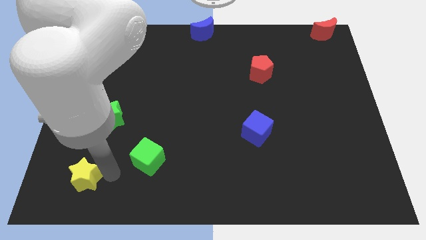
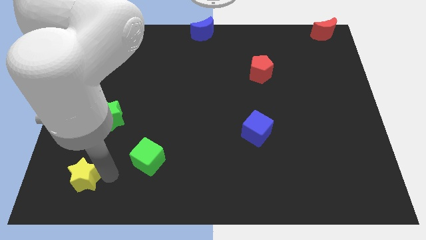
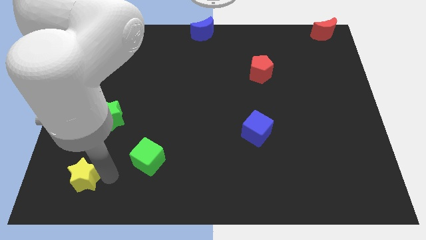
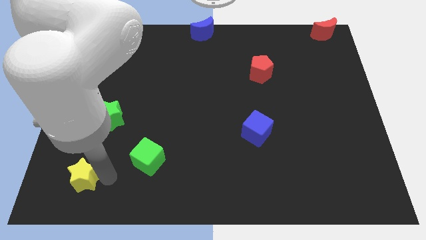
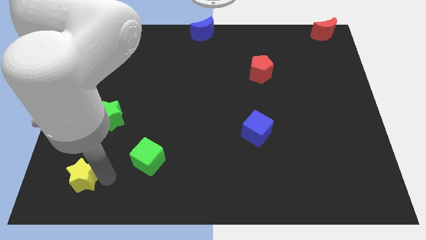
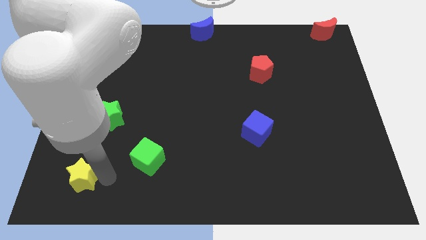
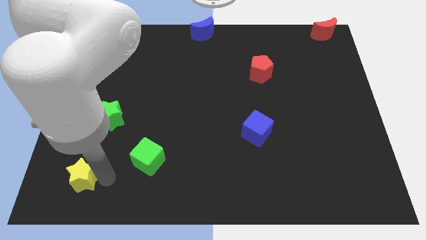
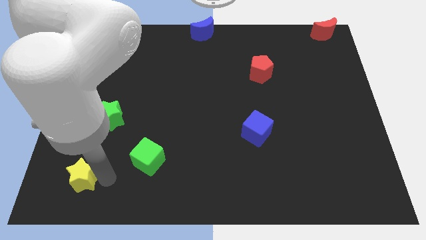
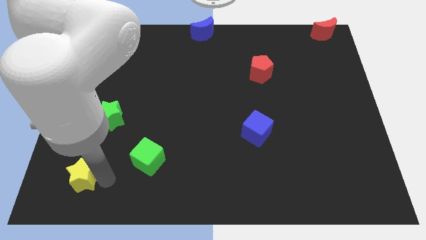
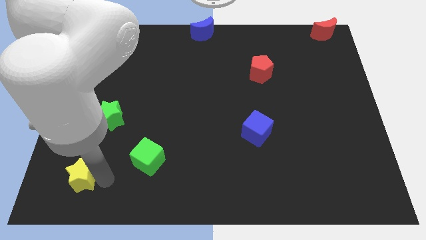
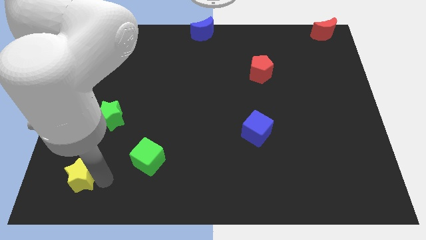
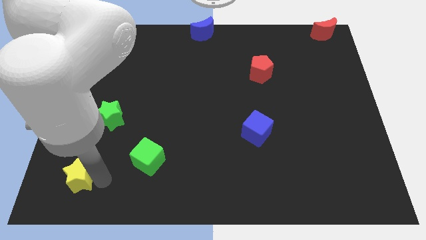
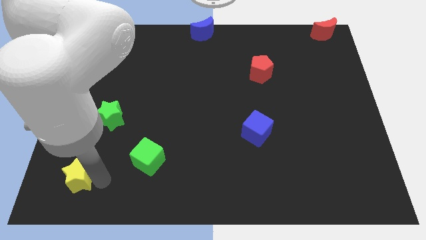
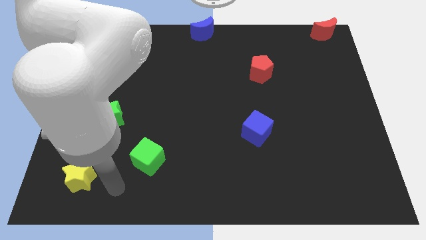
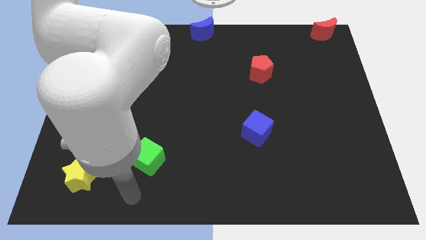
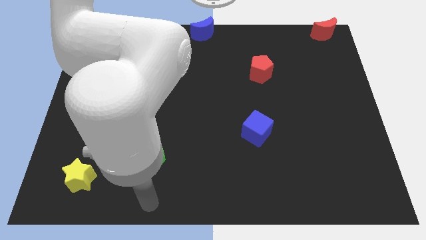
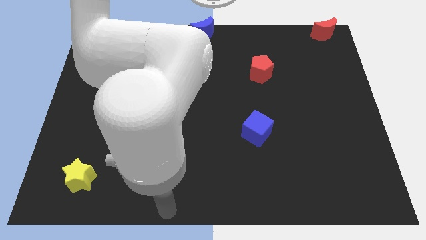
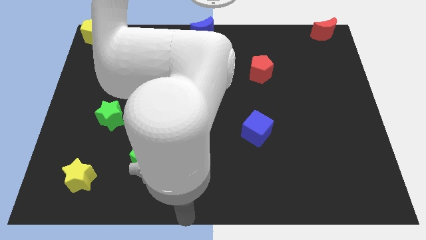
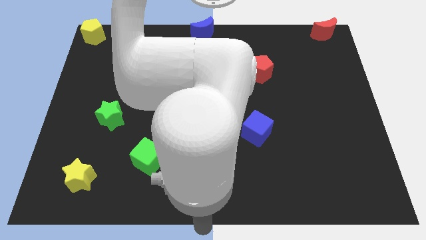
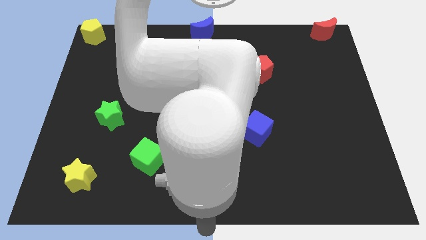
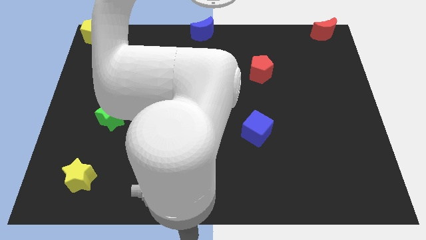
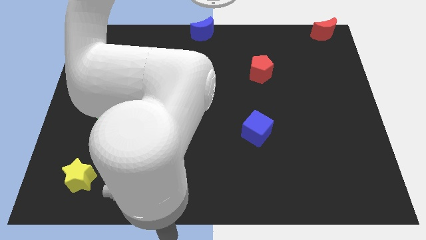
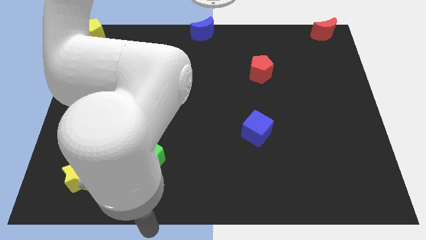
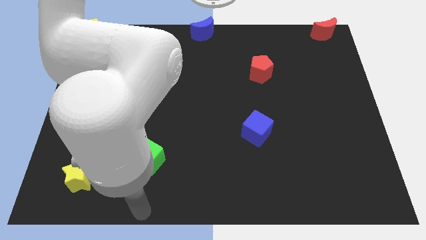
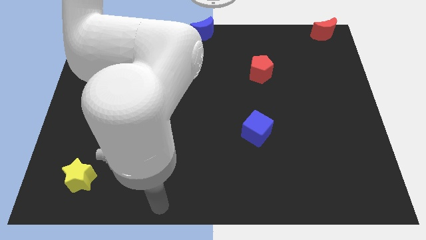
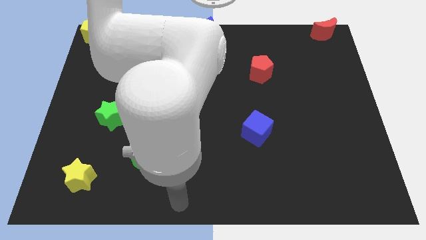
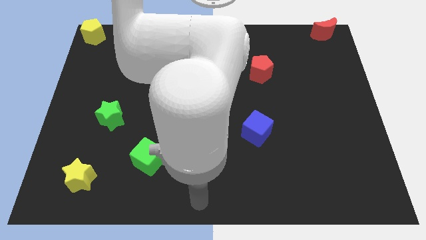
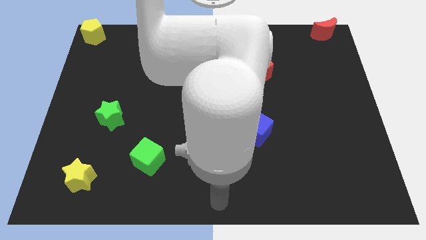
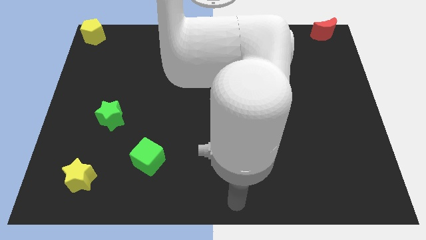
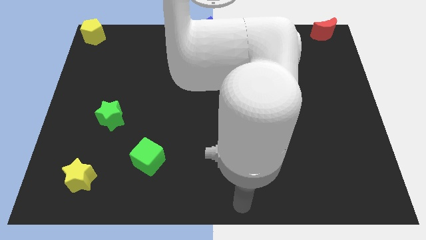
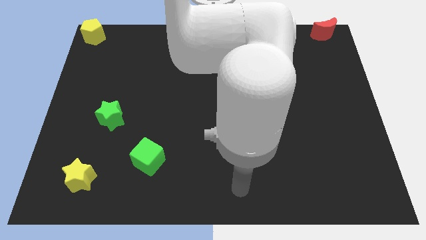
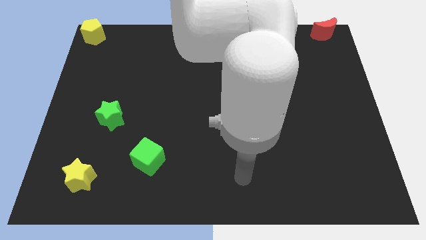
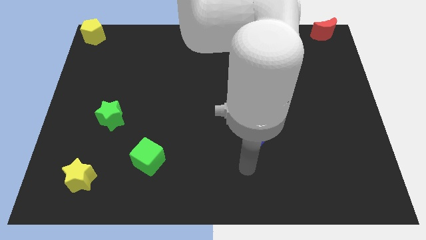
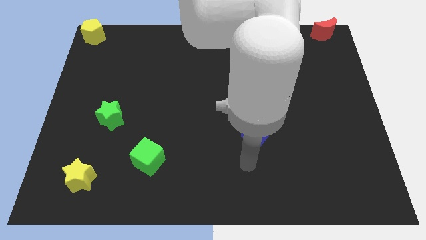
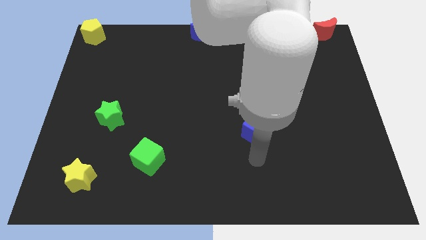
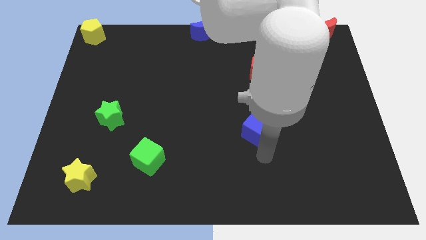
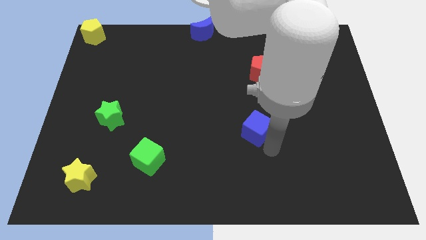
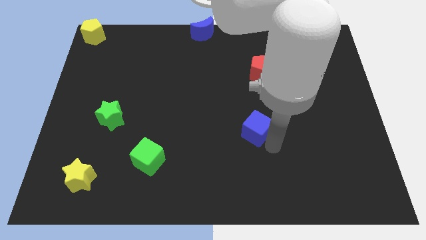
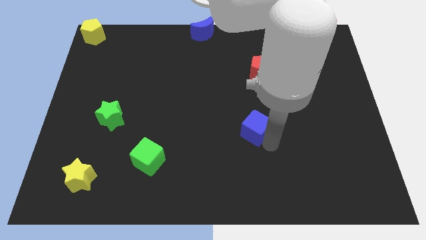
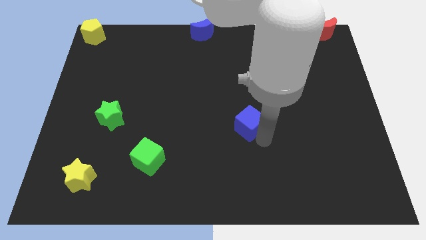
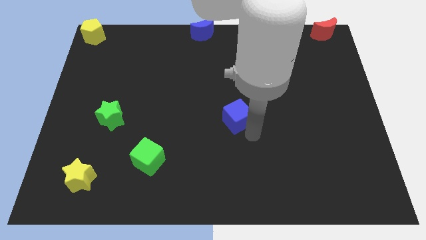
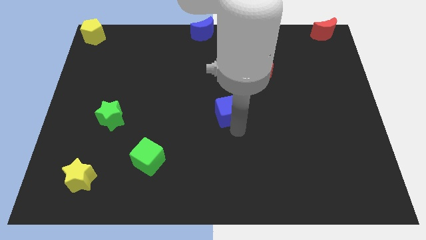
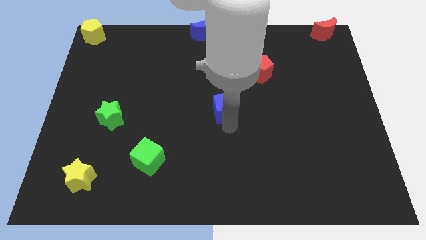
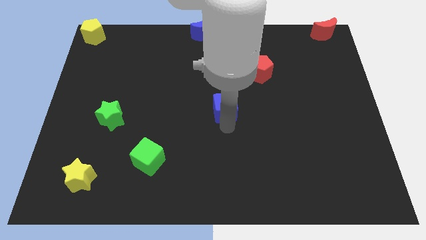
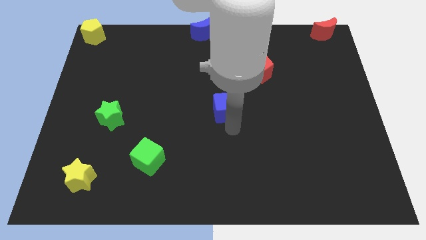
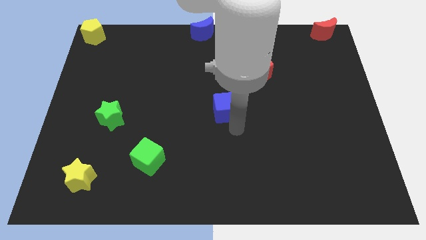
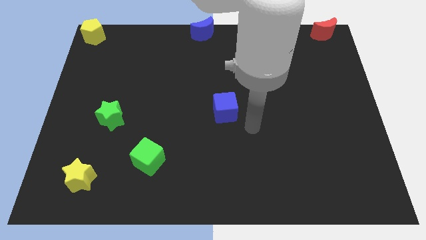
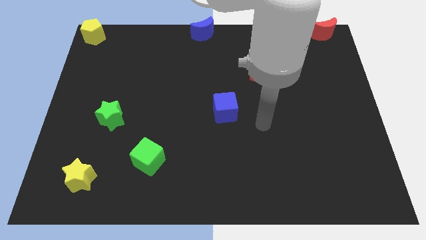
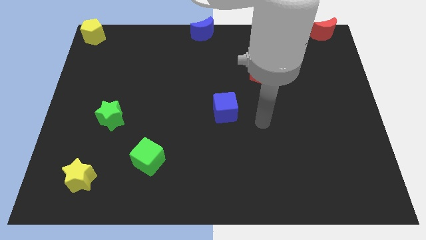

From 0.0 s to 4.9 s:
push the blue cube to the center of the board

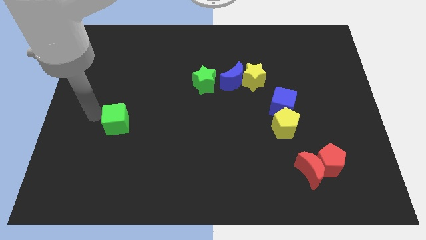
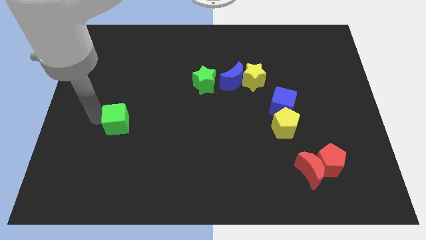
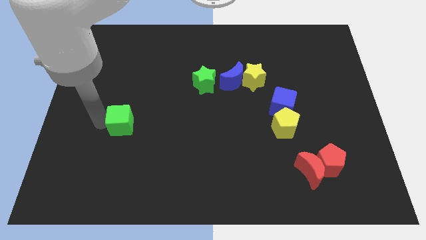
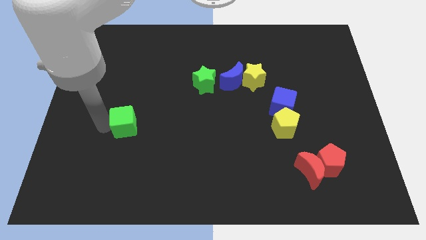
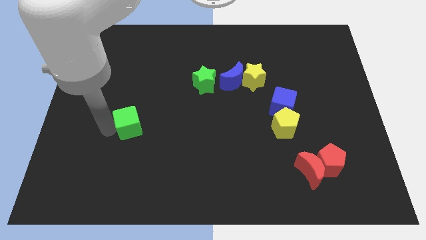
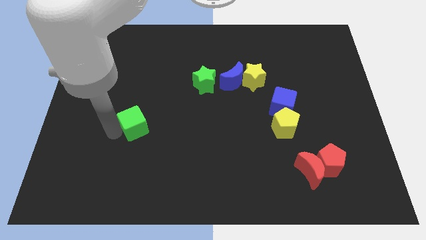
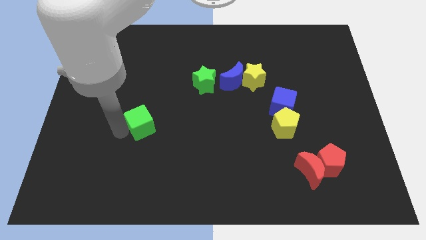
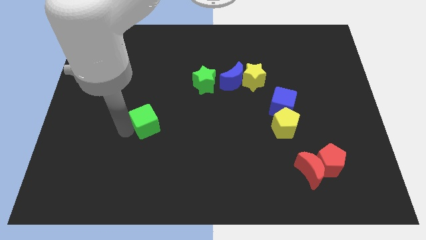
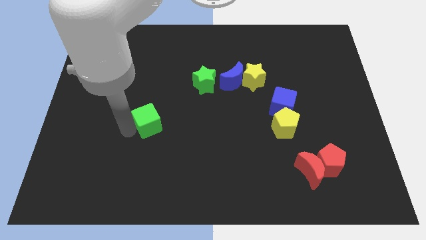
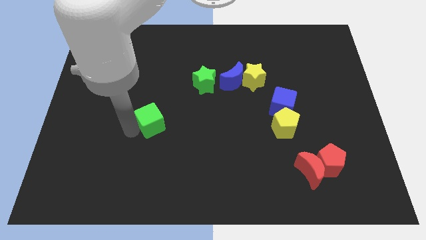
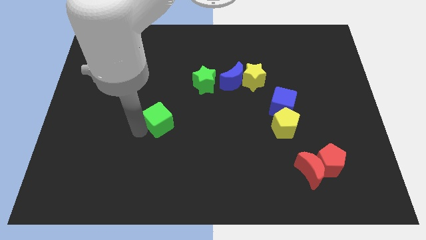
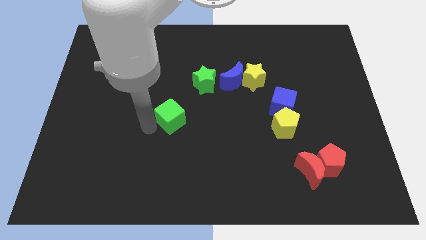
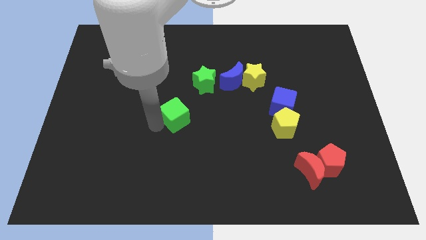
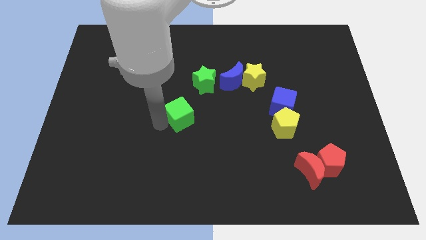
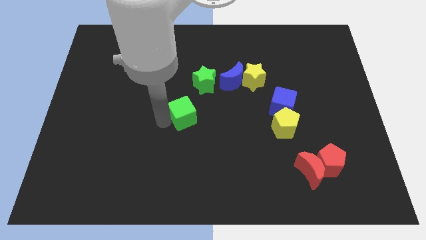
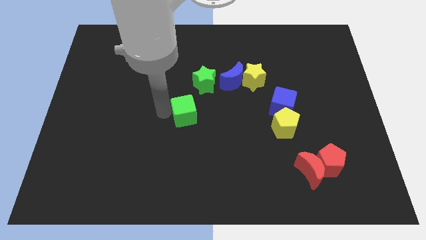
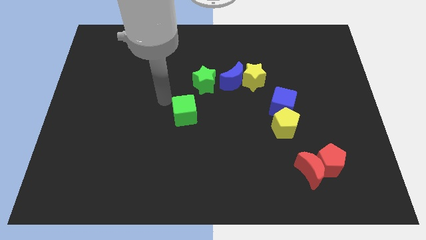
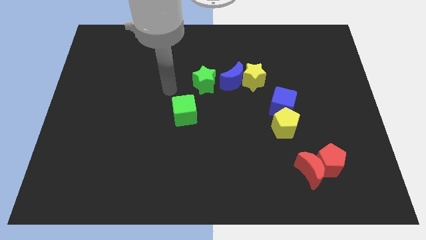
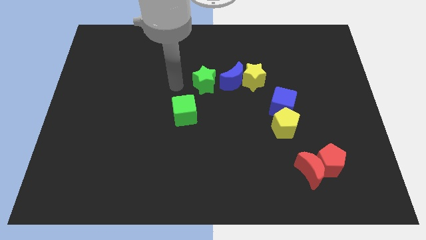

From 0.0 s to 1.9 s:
push the green cube to the center

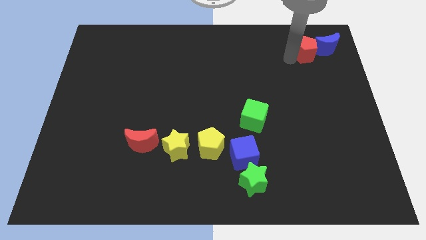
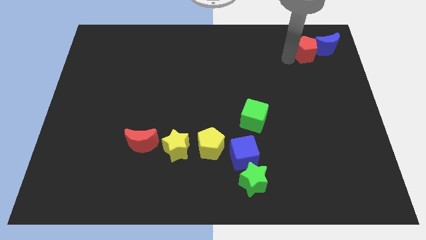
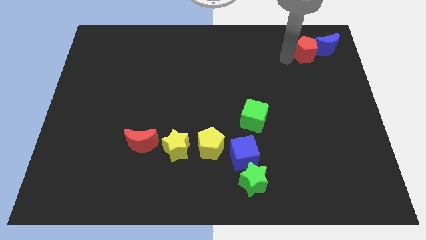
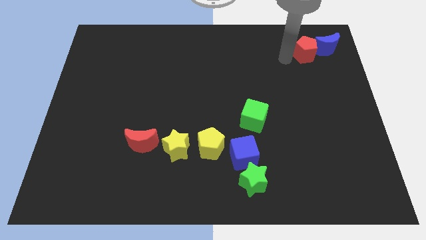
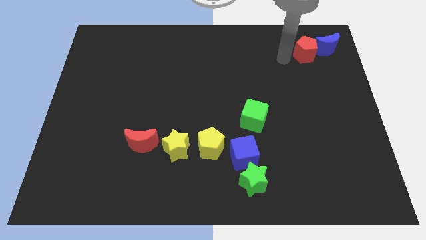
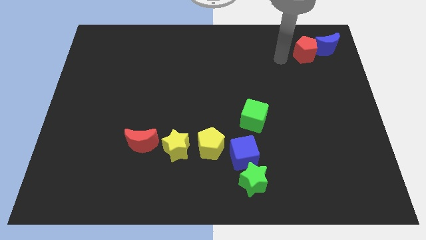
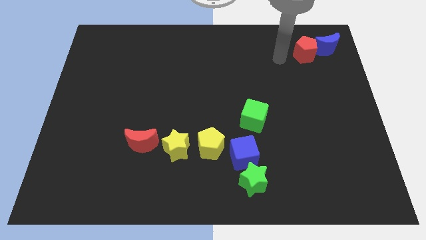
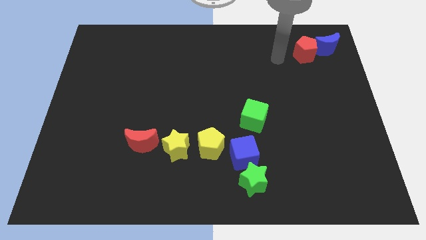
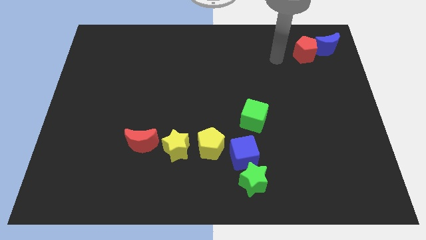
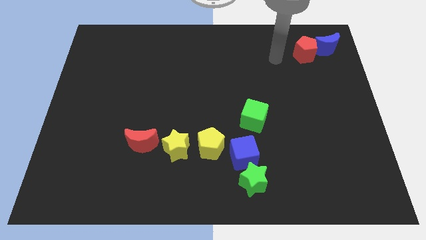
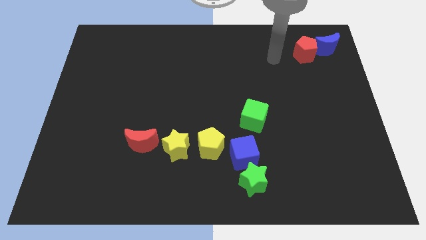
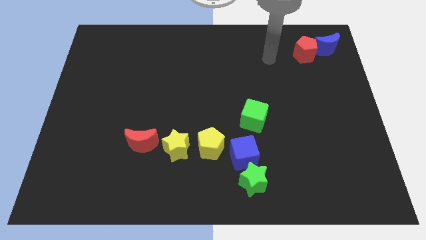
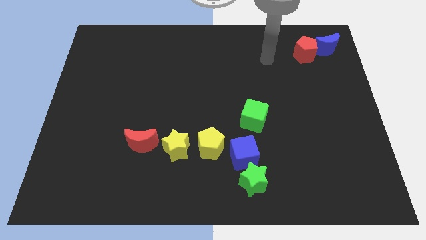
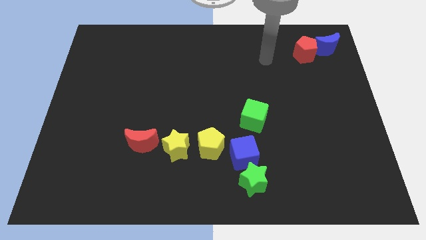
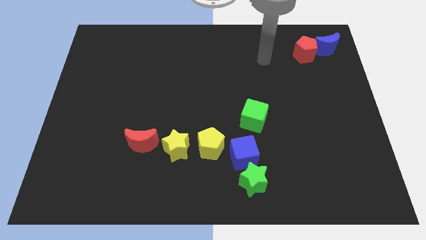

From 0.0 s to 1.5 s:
move your arm away from red pentagon

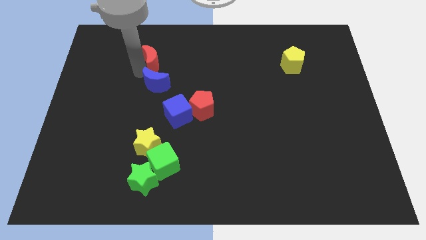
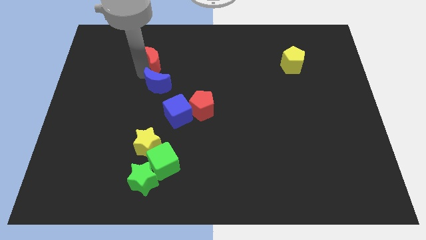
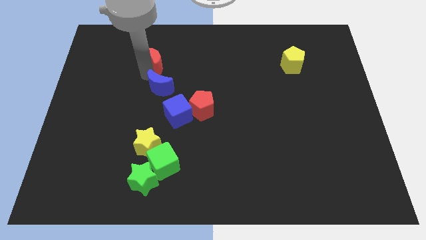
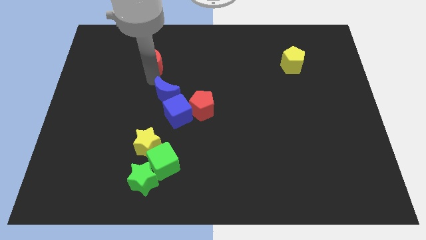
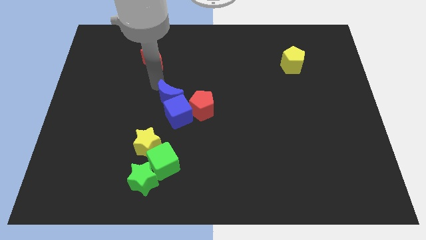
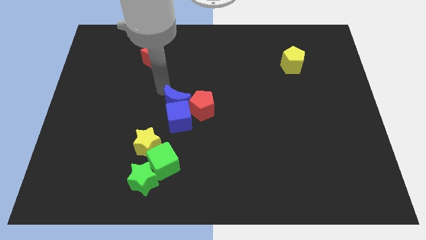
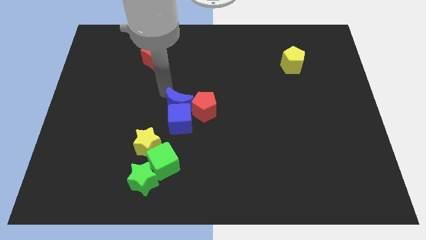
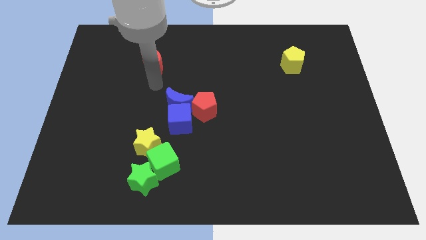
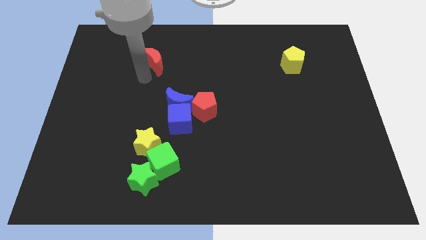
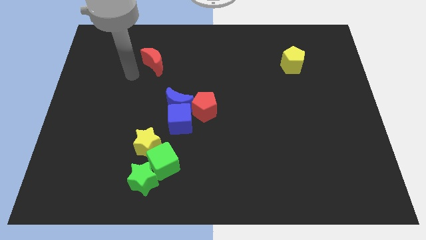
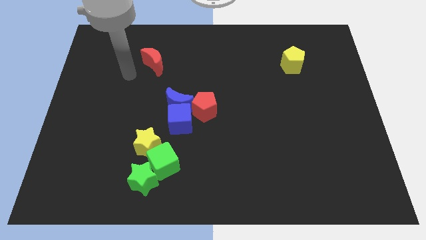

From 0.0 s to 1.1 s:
push the blue crescent into the blue cube
